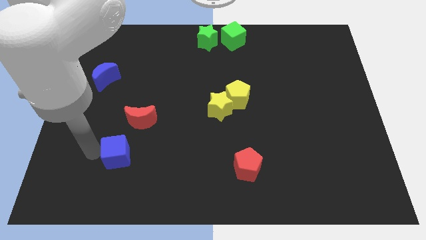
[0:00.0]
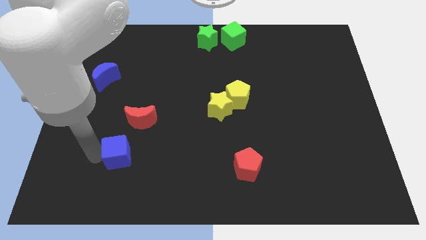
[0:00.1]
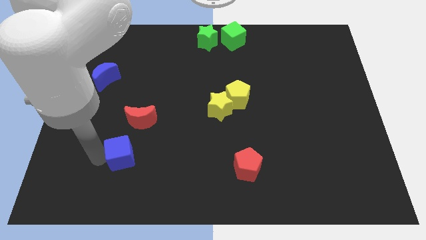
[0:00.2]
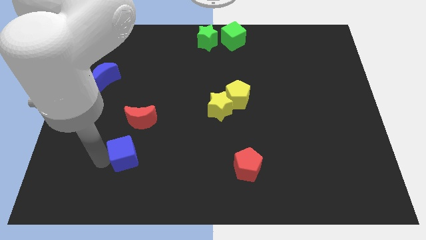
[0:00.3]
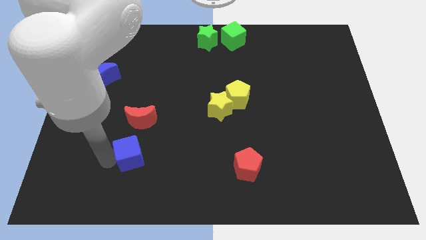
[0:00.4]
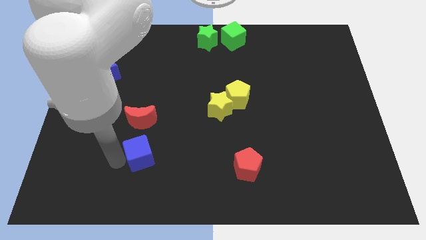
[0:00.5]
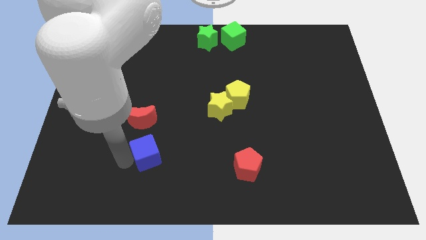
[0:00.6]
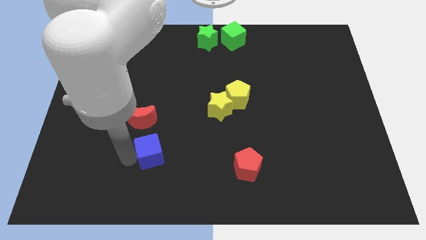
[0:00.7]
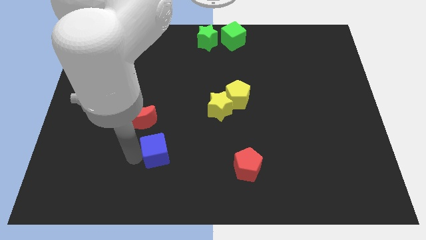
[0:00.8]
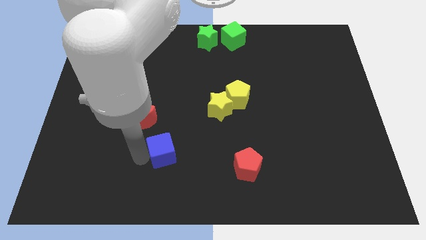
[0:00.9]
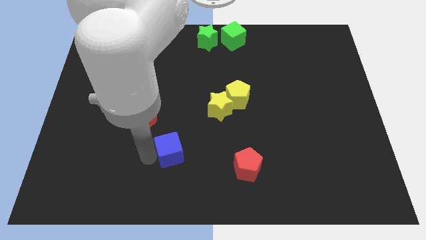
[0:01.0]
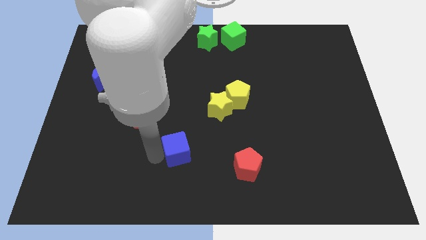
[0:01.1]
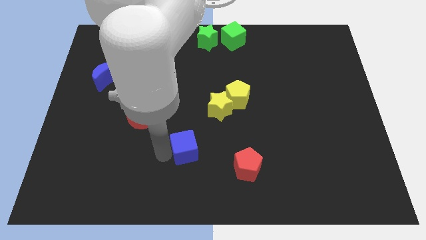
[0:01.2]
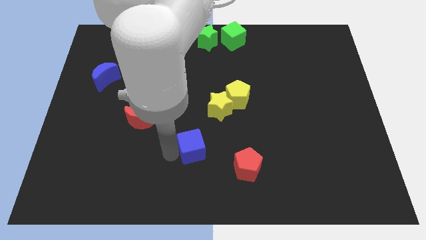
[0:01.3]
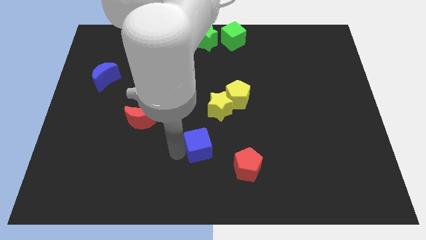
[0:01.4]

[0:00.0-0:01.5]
move the blue cube towards the right side

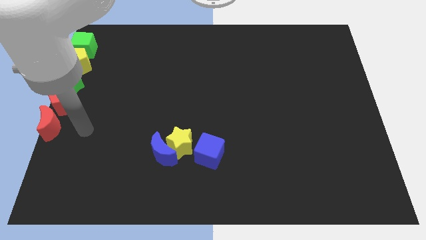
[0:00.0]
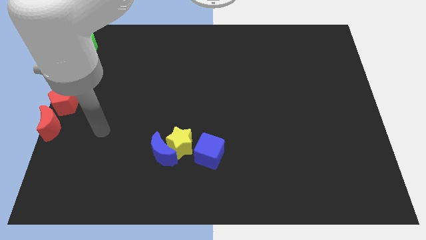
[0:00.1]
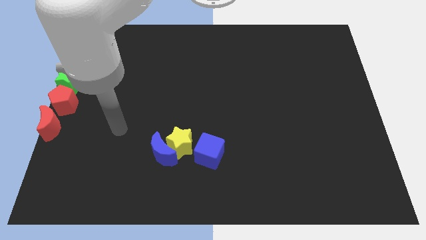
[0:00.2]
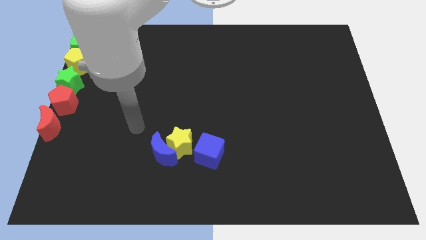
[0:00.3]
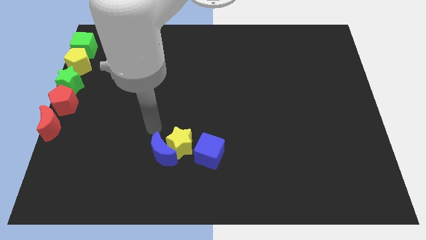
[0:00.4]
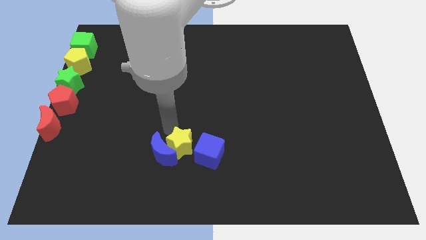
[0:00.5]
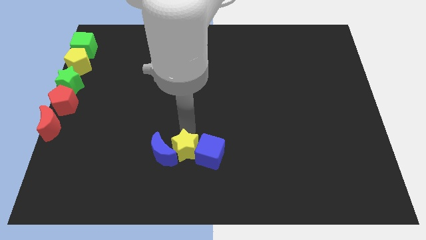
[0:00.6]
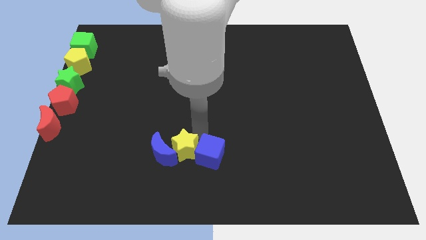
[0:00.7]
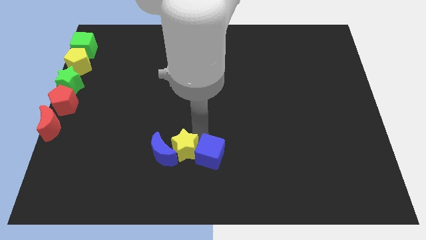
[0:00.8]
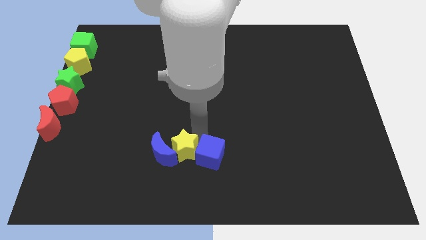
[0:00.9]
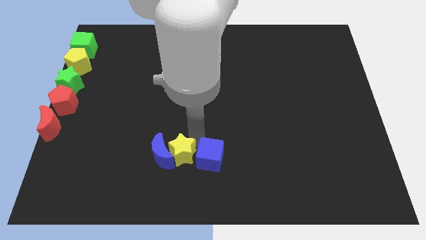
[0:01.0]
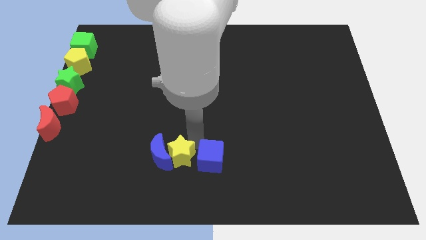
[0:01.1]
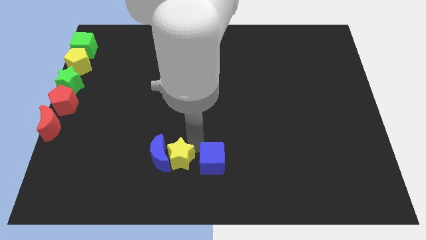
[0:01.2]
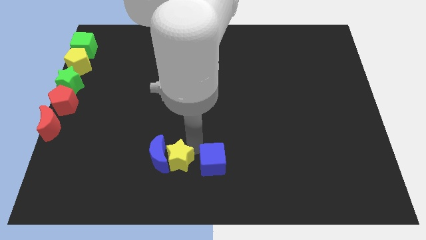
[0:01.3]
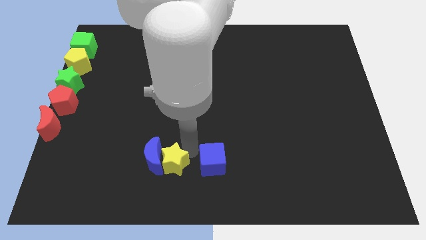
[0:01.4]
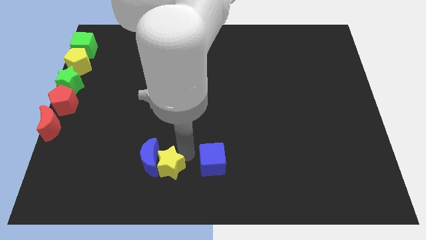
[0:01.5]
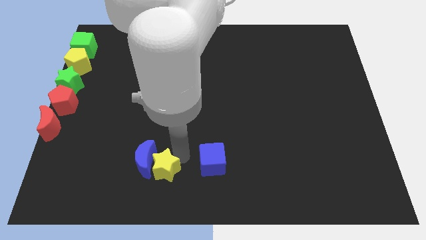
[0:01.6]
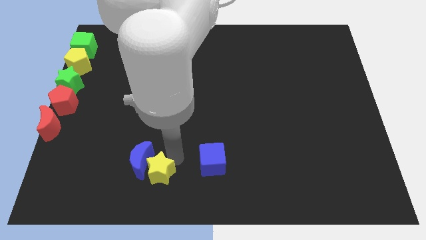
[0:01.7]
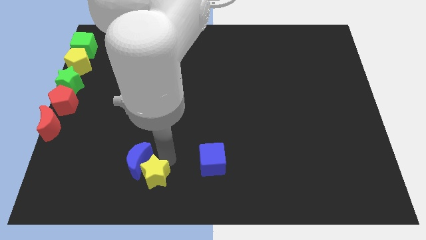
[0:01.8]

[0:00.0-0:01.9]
move the yellow star along with the blue semicircle slightly to the left

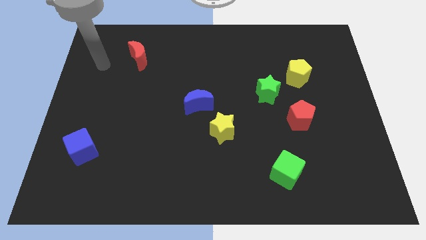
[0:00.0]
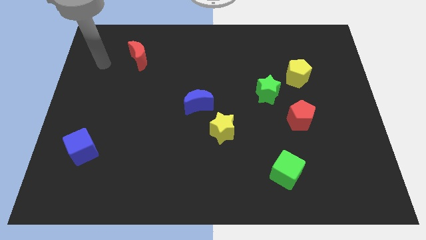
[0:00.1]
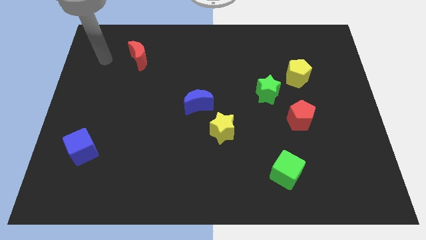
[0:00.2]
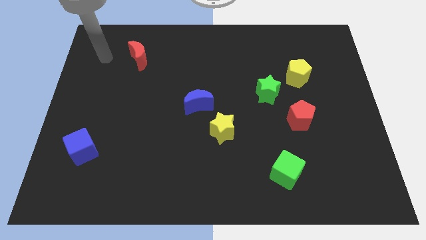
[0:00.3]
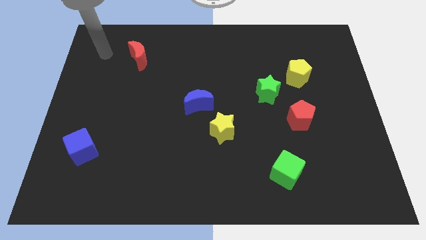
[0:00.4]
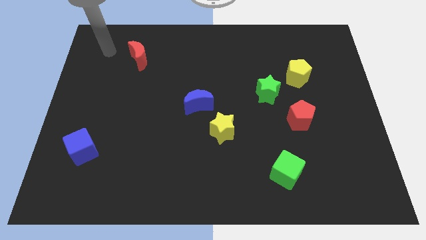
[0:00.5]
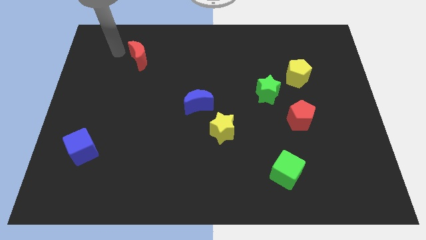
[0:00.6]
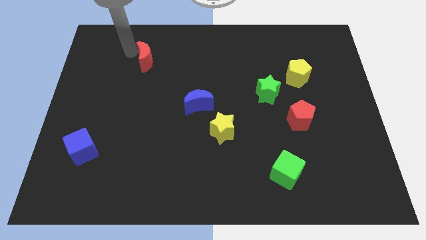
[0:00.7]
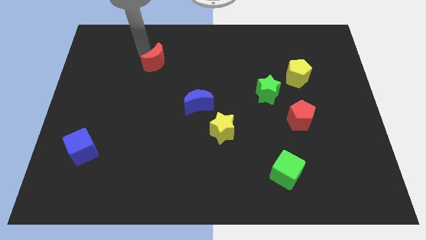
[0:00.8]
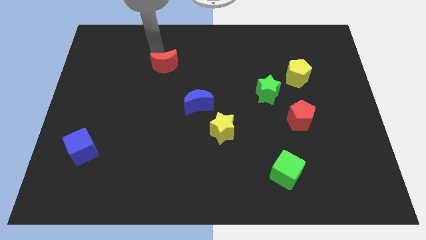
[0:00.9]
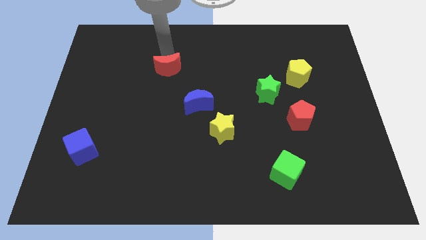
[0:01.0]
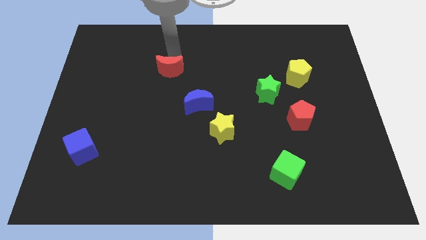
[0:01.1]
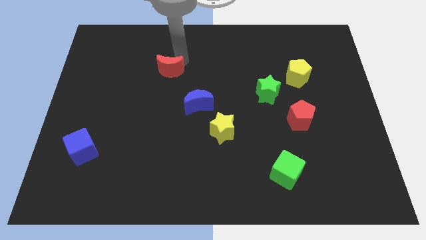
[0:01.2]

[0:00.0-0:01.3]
slide the red moon slightly to the bottom side

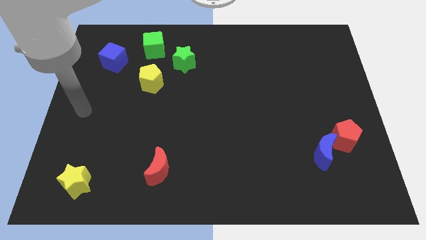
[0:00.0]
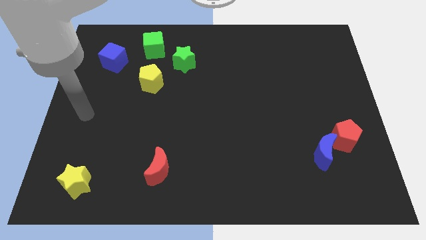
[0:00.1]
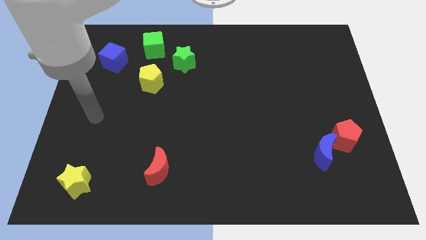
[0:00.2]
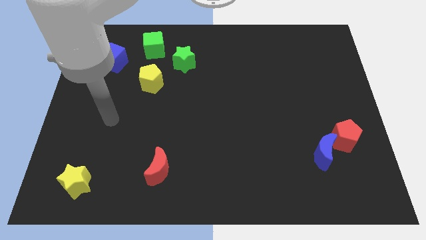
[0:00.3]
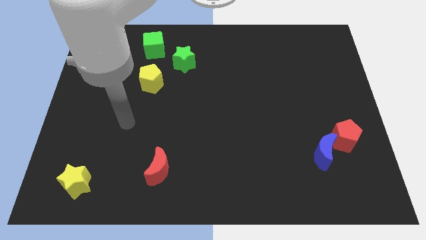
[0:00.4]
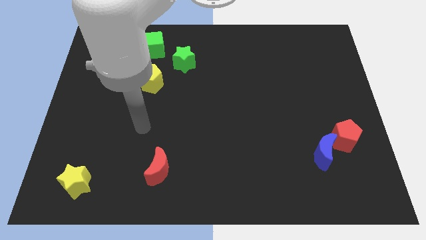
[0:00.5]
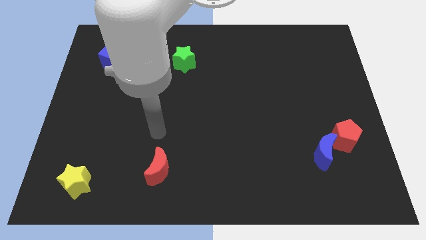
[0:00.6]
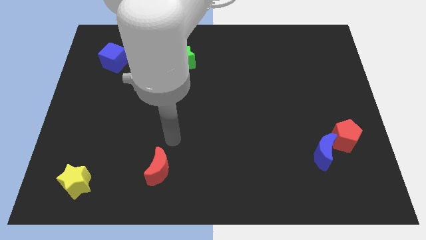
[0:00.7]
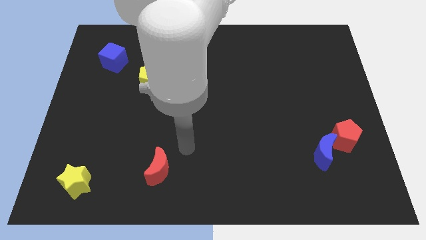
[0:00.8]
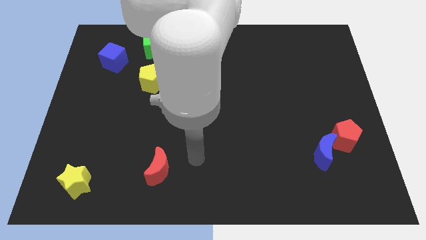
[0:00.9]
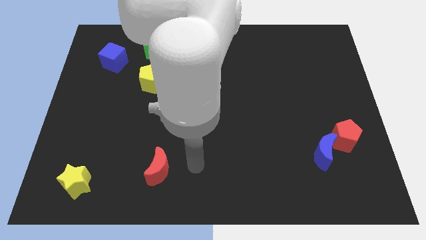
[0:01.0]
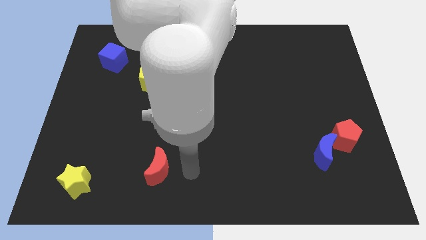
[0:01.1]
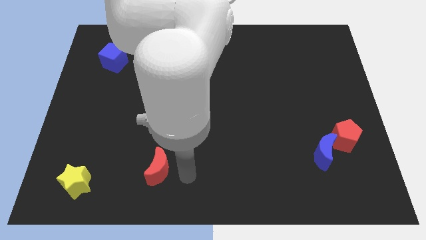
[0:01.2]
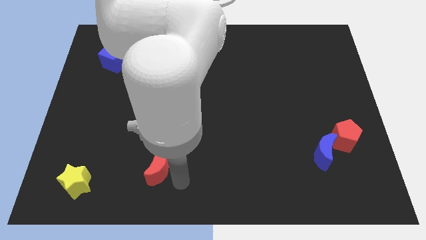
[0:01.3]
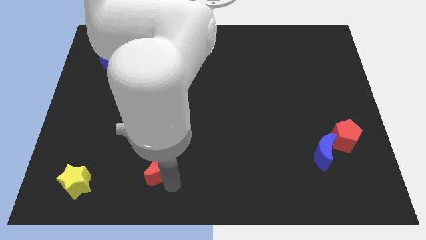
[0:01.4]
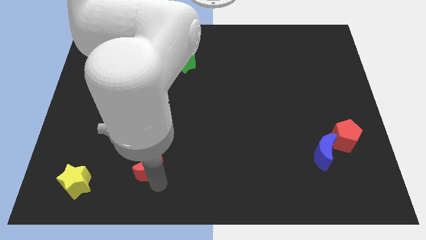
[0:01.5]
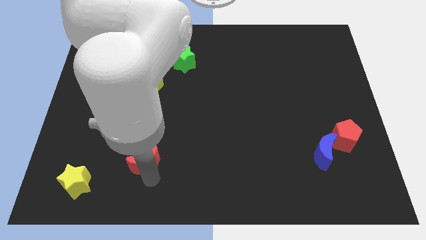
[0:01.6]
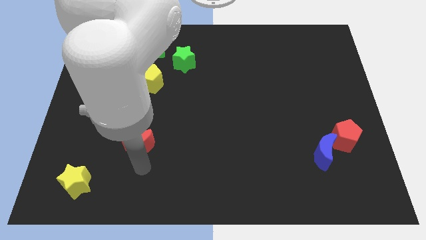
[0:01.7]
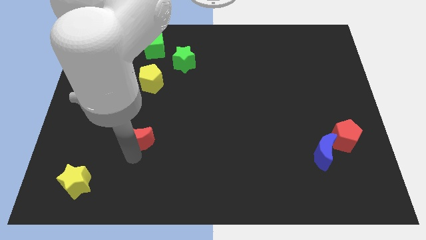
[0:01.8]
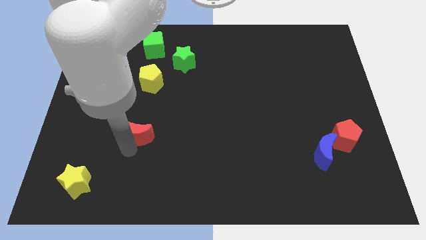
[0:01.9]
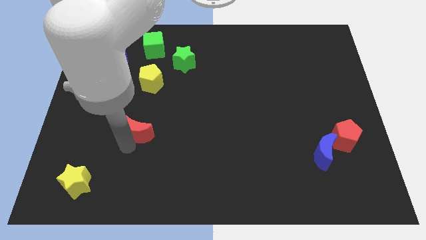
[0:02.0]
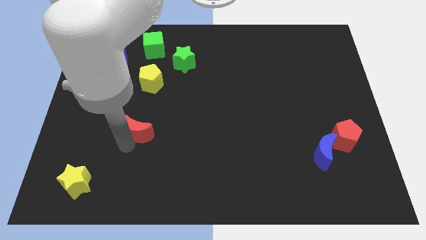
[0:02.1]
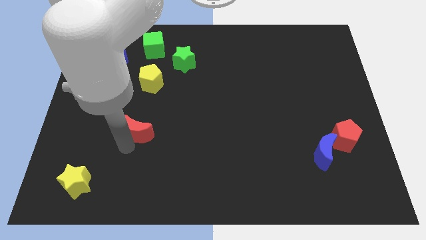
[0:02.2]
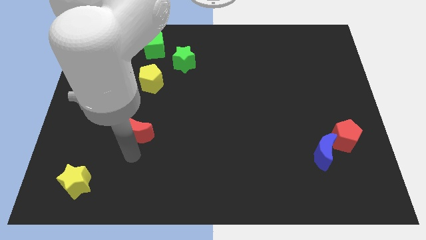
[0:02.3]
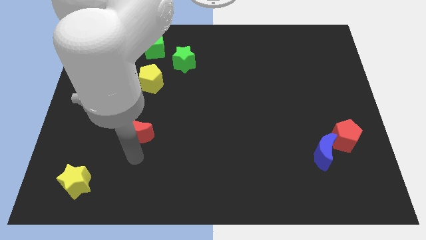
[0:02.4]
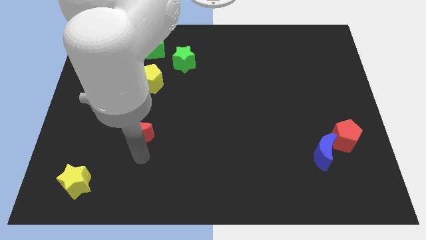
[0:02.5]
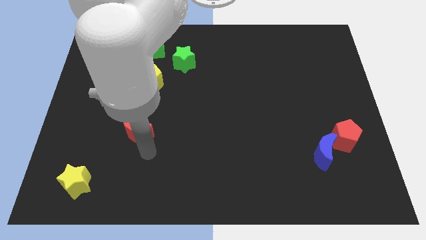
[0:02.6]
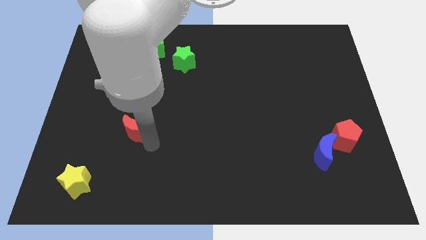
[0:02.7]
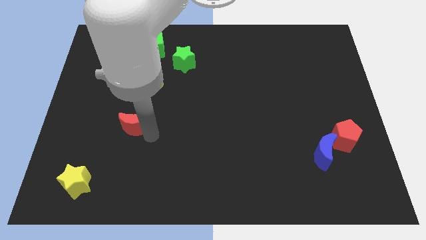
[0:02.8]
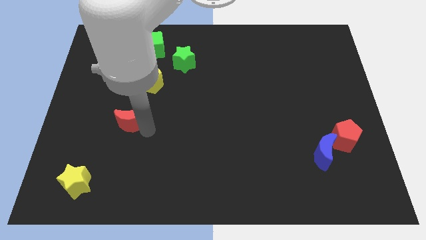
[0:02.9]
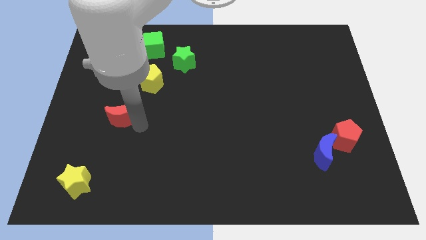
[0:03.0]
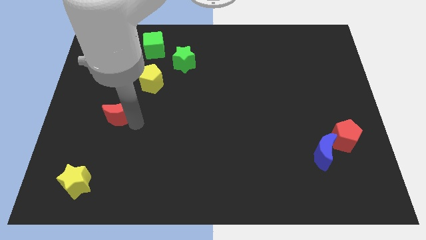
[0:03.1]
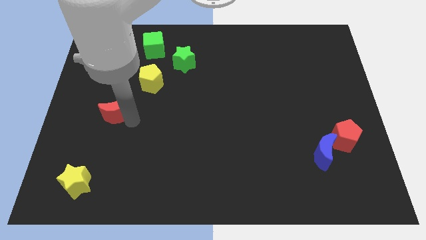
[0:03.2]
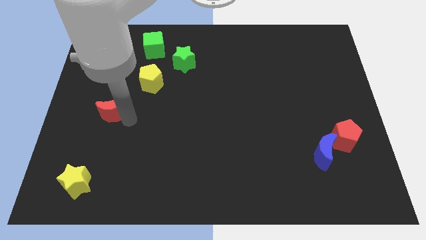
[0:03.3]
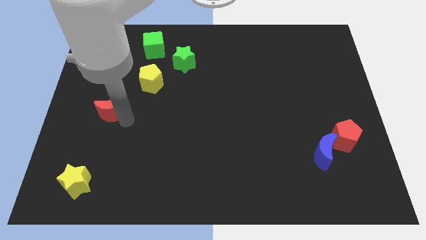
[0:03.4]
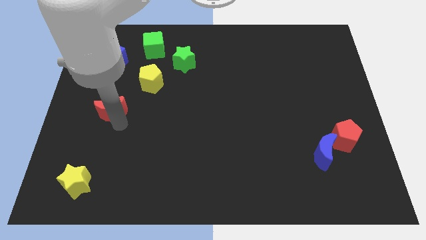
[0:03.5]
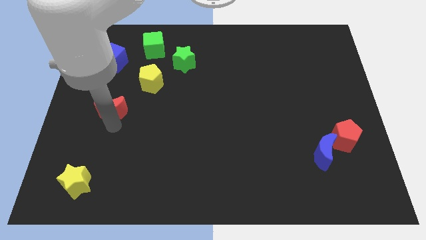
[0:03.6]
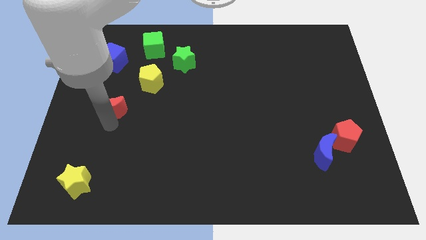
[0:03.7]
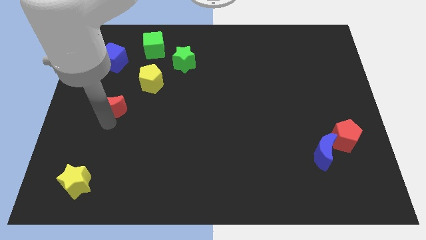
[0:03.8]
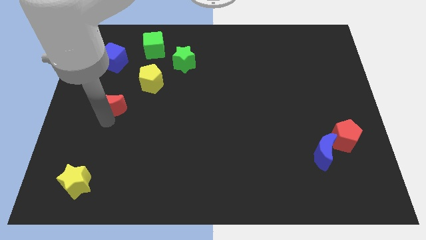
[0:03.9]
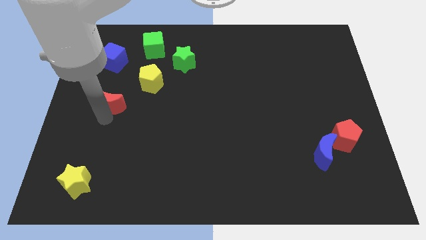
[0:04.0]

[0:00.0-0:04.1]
slide red moon below the blue cube

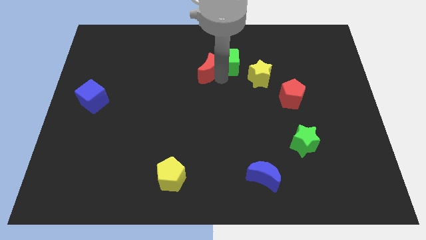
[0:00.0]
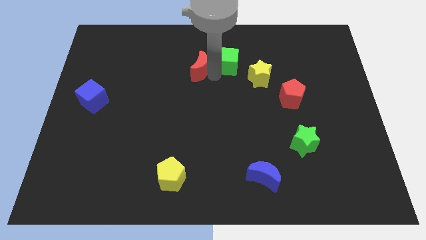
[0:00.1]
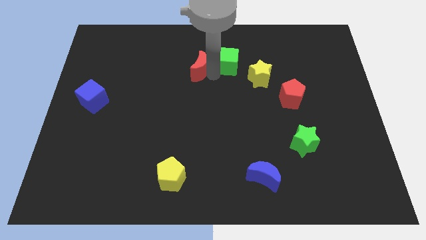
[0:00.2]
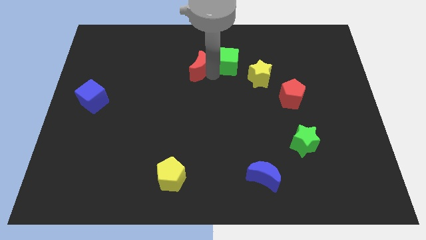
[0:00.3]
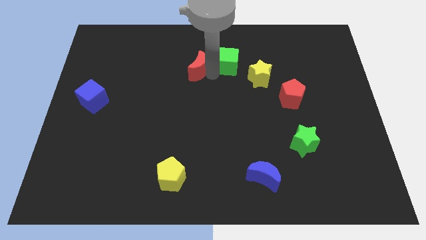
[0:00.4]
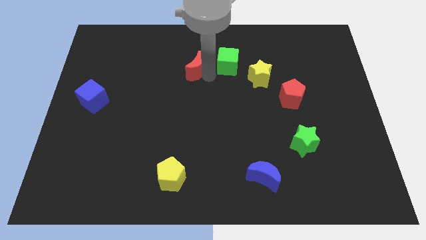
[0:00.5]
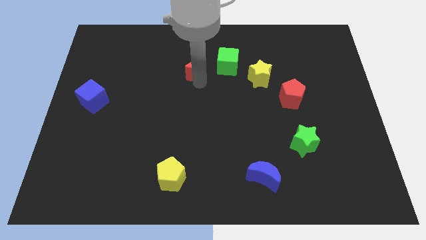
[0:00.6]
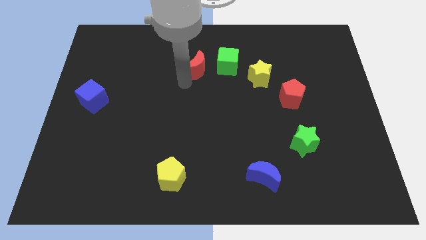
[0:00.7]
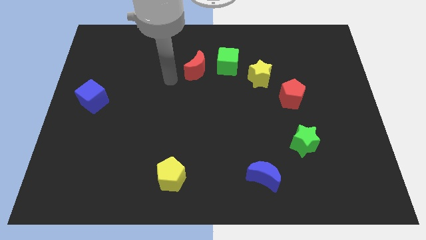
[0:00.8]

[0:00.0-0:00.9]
separate the red crescent away from the green cube
